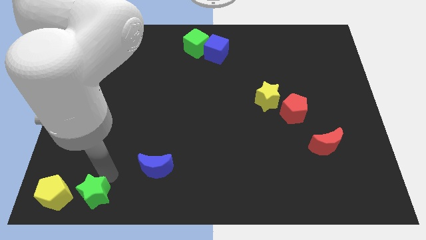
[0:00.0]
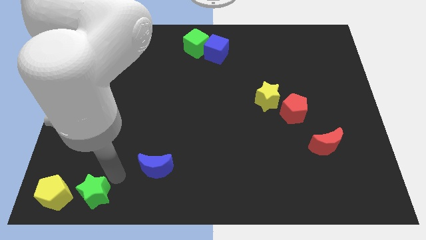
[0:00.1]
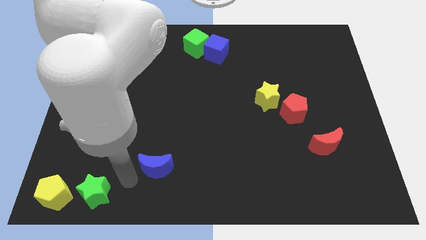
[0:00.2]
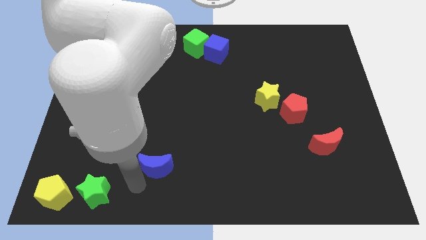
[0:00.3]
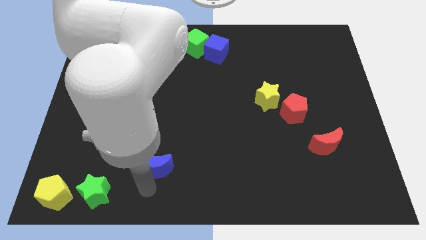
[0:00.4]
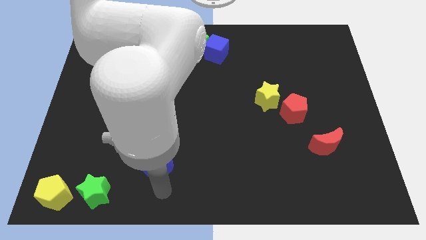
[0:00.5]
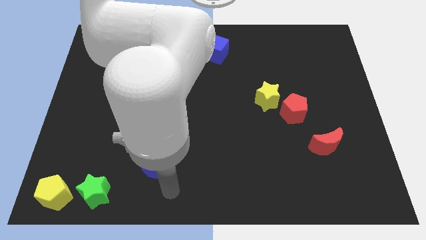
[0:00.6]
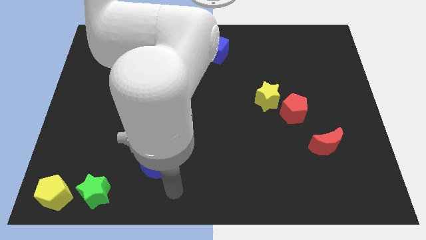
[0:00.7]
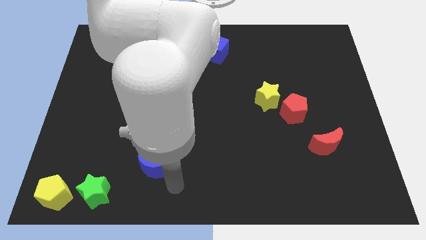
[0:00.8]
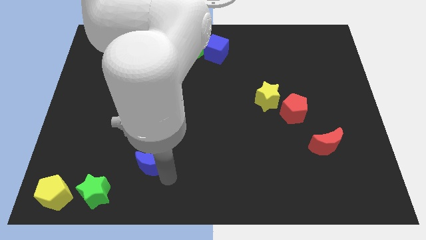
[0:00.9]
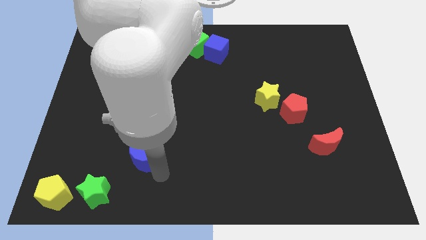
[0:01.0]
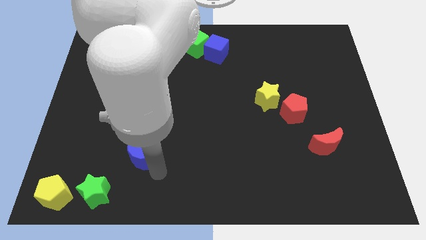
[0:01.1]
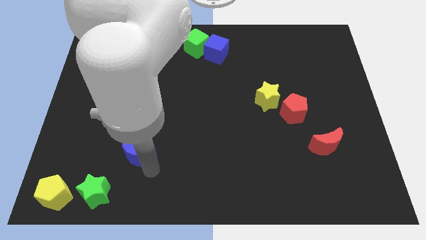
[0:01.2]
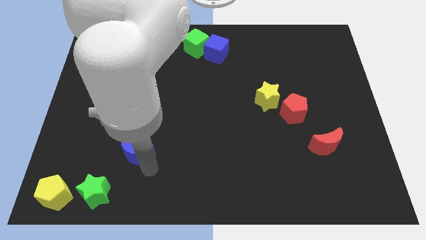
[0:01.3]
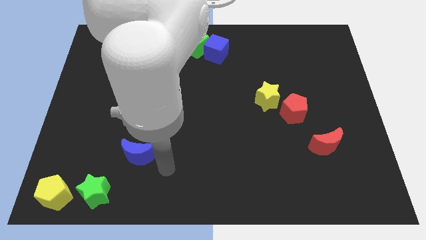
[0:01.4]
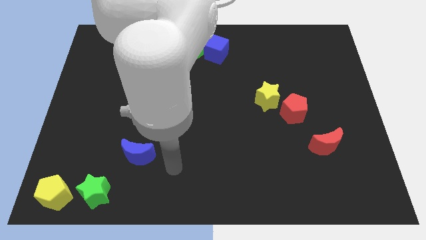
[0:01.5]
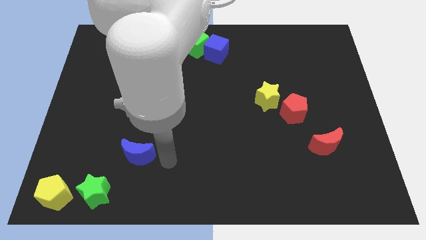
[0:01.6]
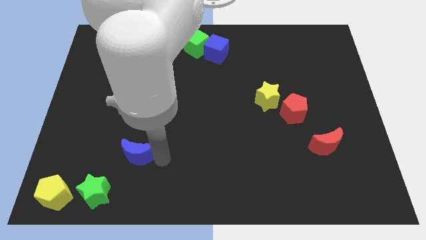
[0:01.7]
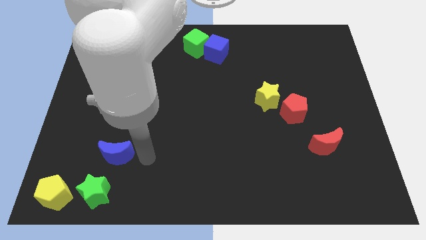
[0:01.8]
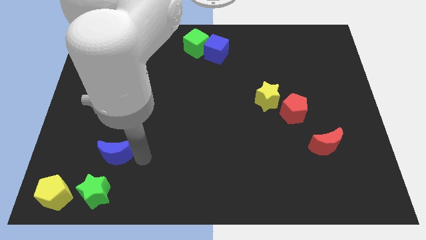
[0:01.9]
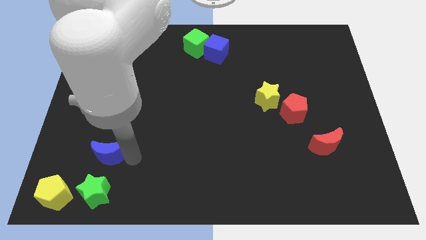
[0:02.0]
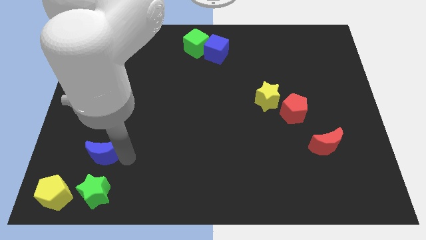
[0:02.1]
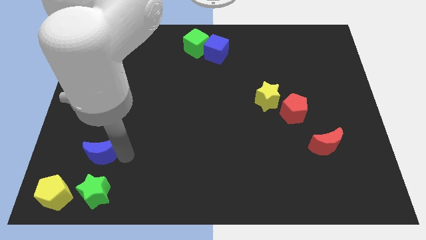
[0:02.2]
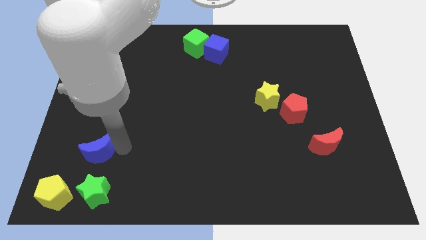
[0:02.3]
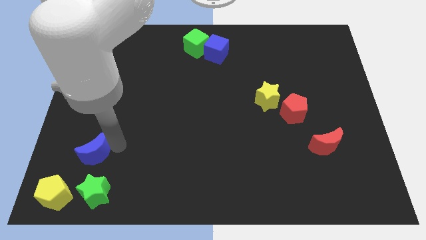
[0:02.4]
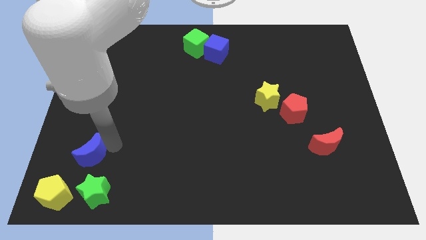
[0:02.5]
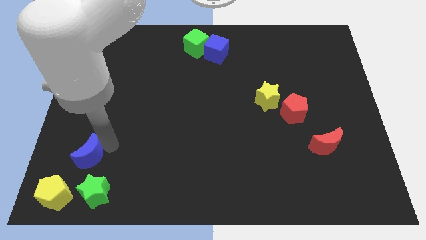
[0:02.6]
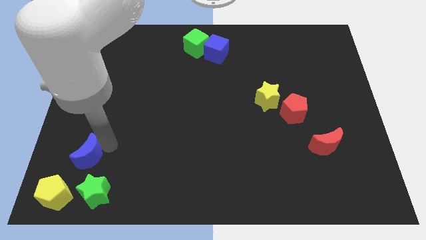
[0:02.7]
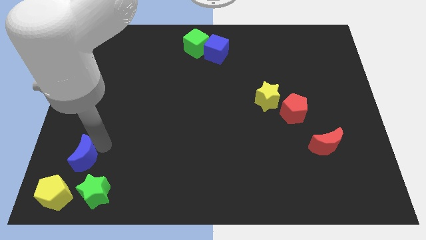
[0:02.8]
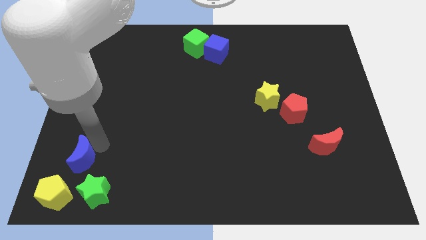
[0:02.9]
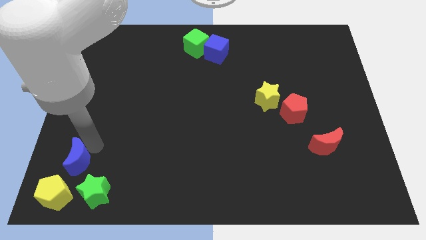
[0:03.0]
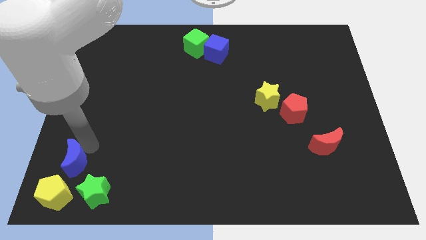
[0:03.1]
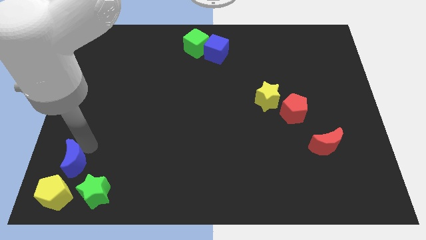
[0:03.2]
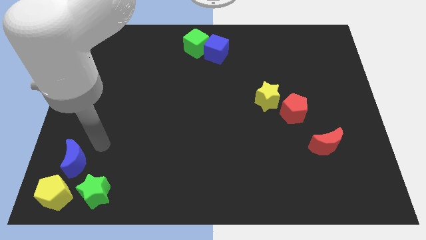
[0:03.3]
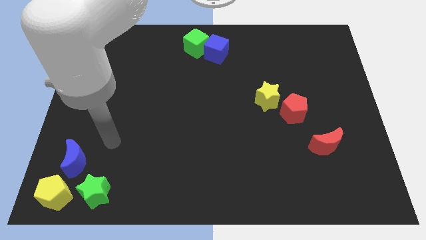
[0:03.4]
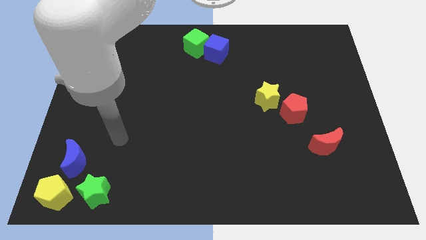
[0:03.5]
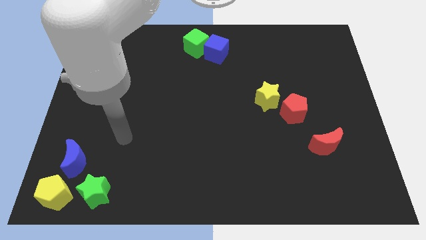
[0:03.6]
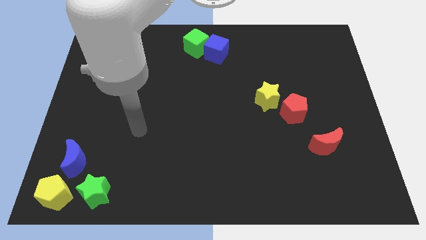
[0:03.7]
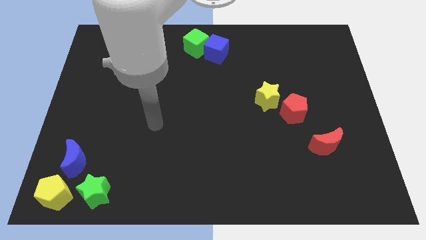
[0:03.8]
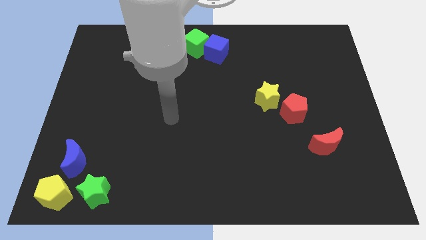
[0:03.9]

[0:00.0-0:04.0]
place the blue crescent above the yellow pentagon

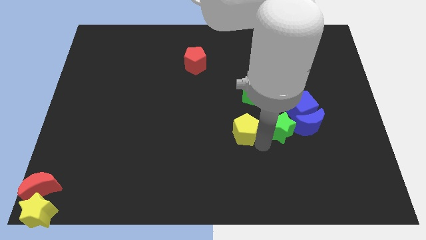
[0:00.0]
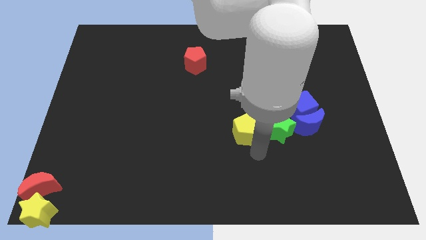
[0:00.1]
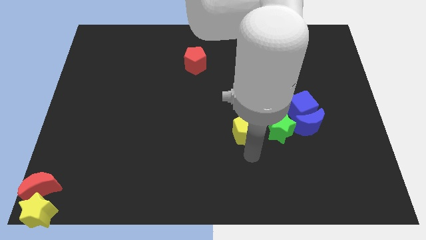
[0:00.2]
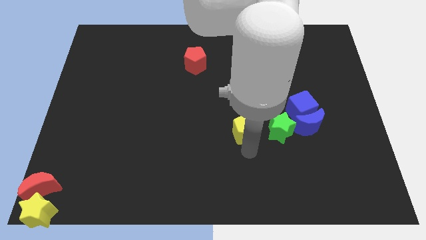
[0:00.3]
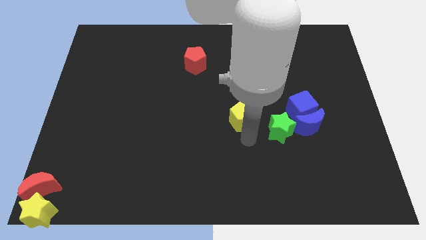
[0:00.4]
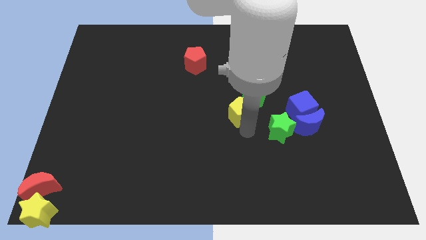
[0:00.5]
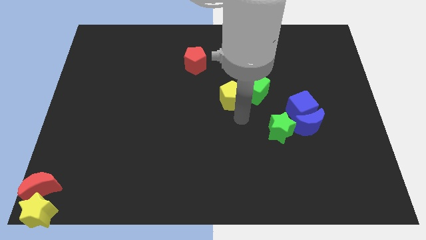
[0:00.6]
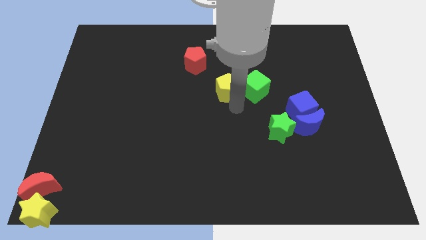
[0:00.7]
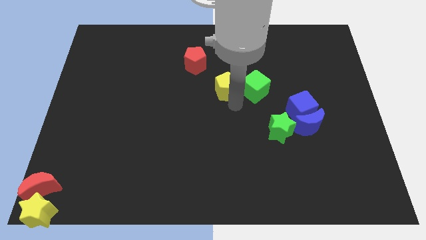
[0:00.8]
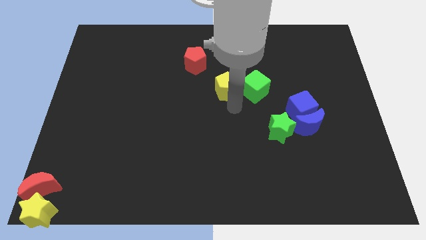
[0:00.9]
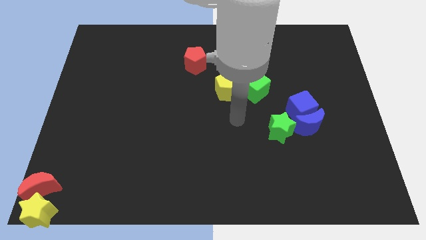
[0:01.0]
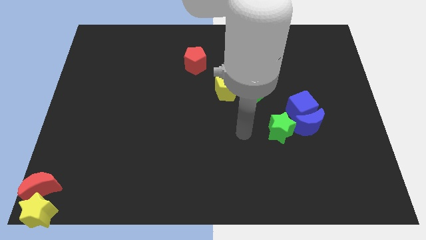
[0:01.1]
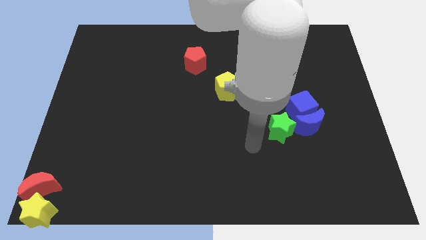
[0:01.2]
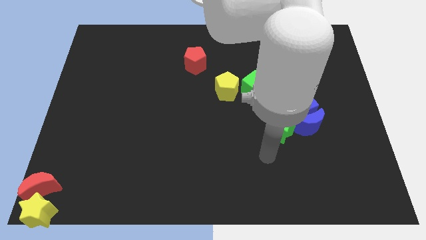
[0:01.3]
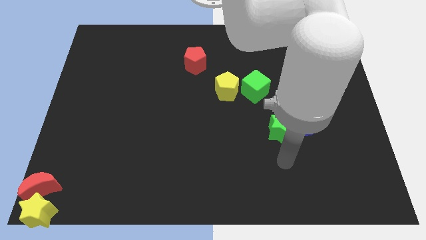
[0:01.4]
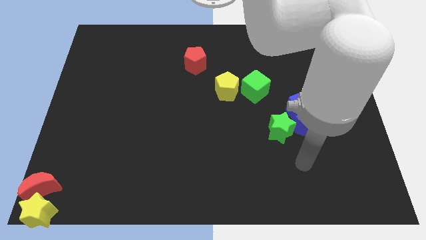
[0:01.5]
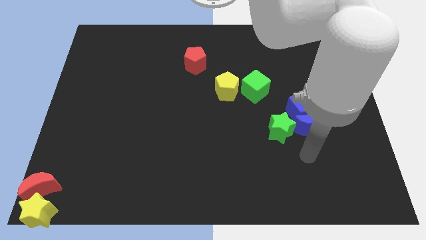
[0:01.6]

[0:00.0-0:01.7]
move the yellow pentagon to the left side of the green cube

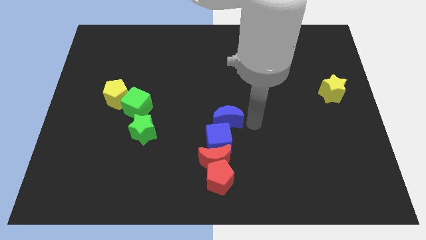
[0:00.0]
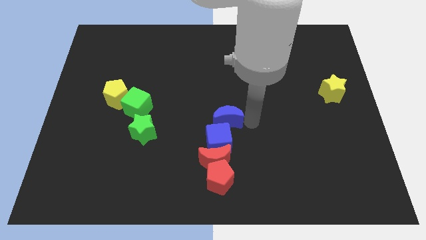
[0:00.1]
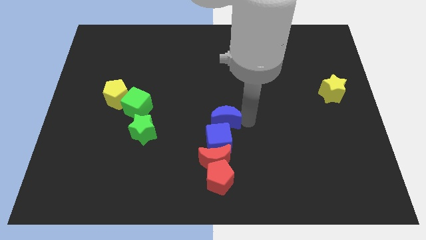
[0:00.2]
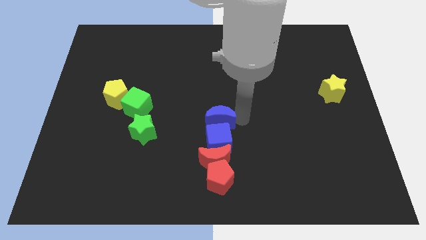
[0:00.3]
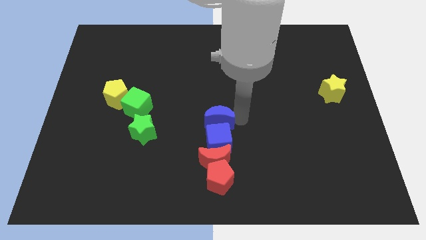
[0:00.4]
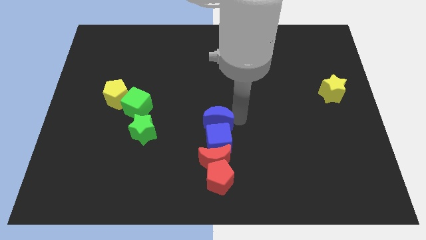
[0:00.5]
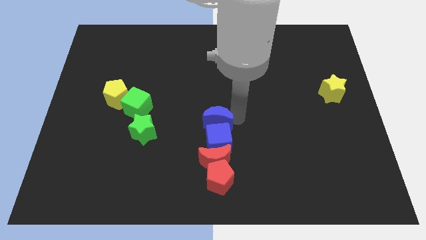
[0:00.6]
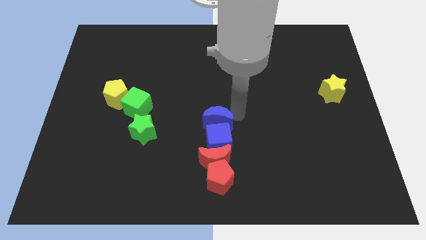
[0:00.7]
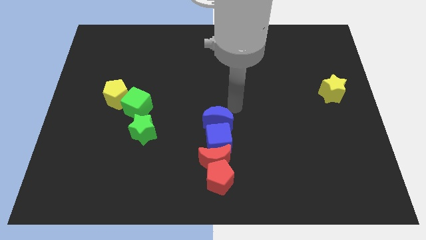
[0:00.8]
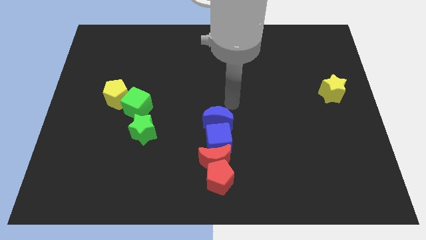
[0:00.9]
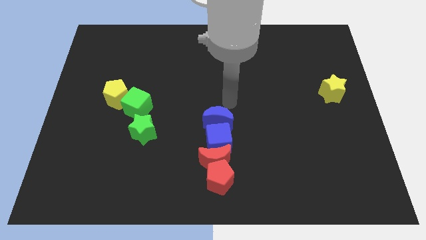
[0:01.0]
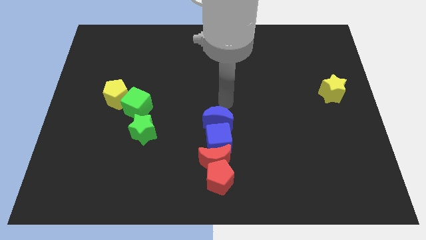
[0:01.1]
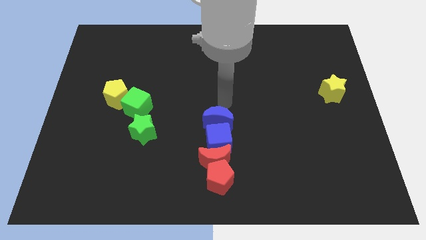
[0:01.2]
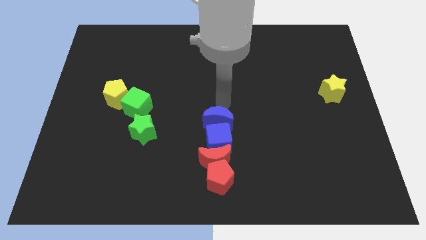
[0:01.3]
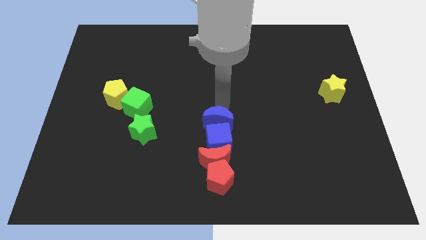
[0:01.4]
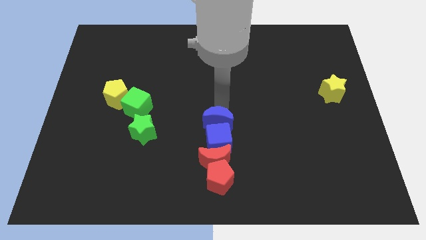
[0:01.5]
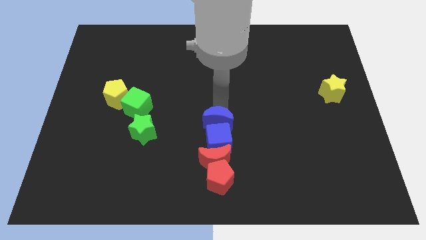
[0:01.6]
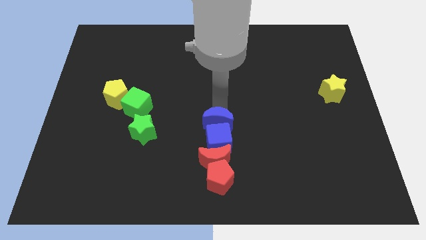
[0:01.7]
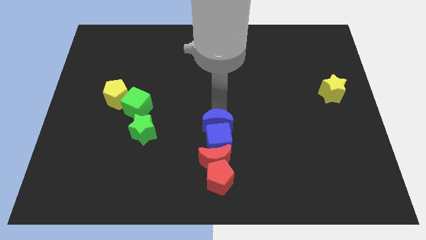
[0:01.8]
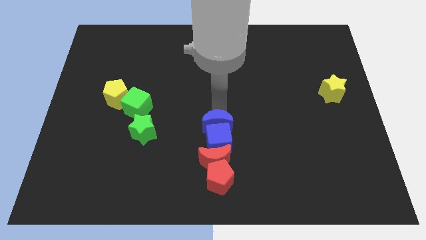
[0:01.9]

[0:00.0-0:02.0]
push the blue crescent above the blue cube

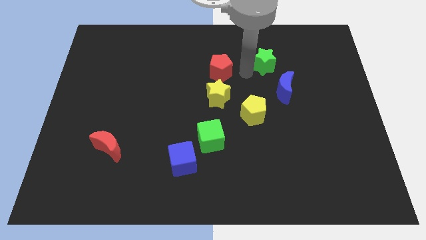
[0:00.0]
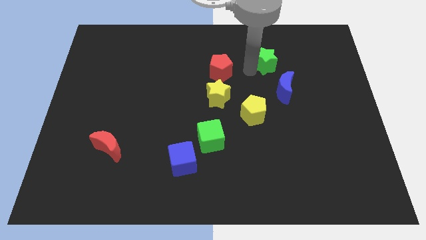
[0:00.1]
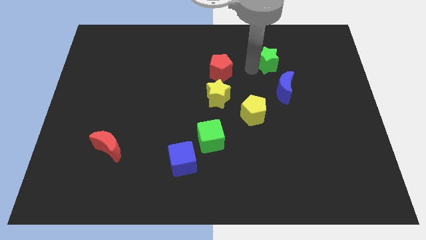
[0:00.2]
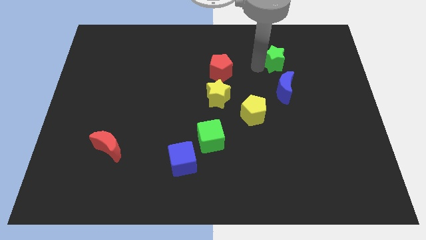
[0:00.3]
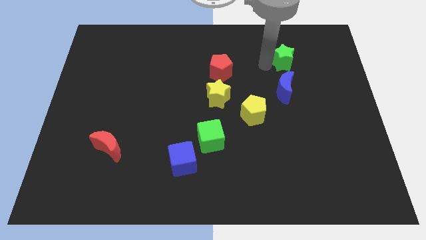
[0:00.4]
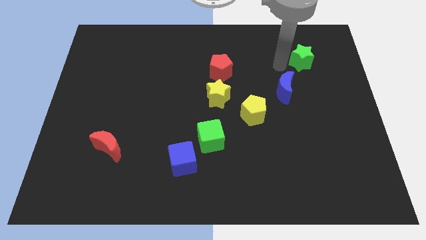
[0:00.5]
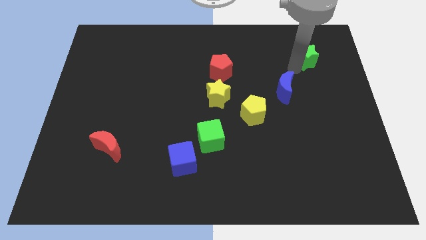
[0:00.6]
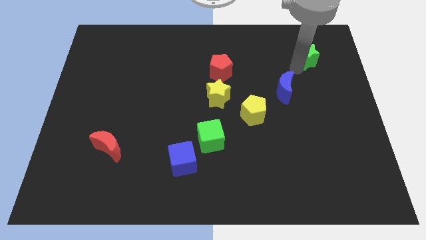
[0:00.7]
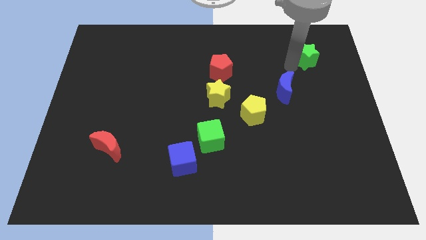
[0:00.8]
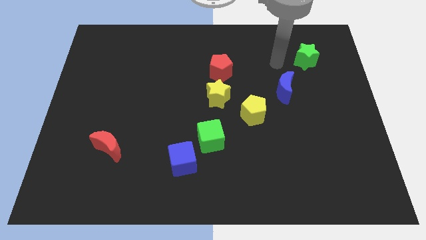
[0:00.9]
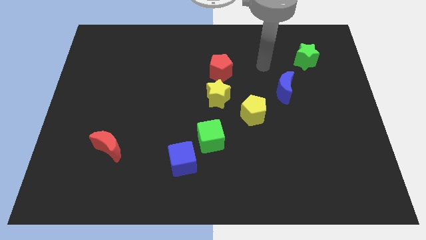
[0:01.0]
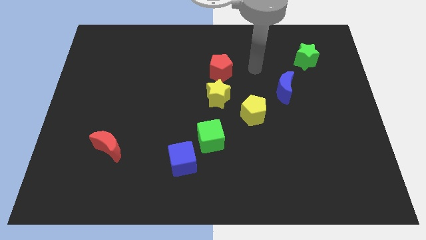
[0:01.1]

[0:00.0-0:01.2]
push the green star to the top right of the blue moon
